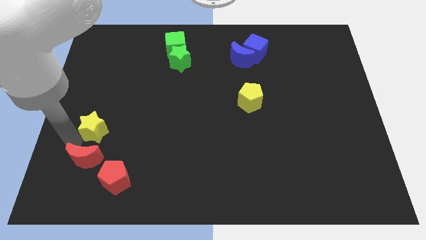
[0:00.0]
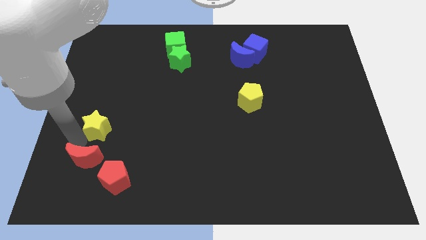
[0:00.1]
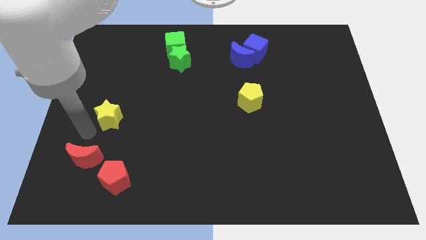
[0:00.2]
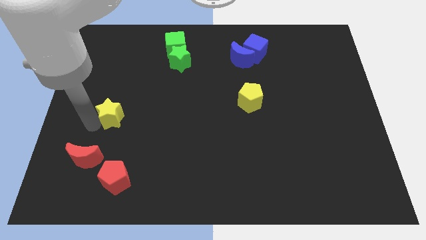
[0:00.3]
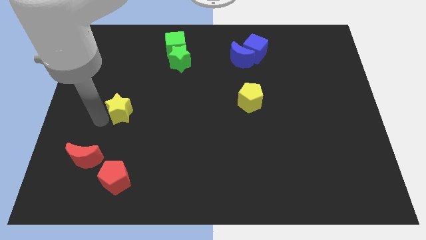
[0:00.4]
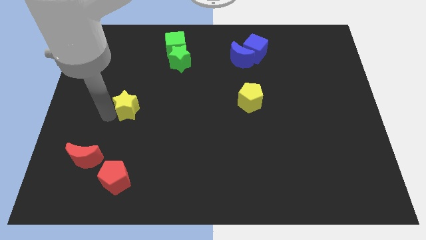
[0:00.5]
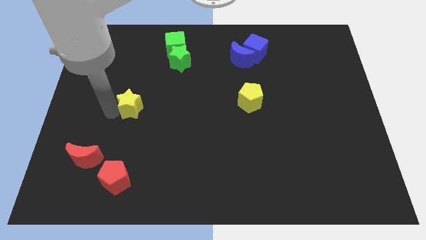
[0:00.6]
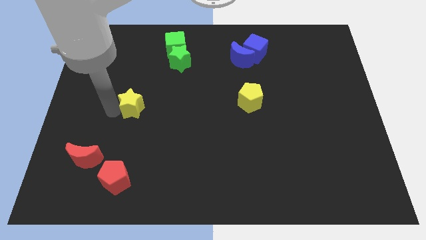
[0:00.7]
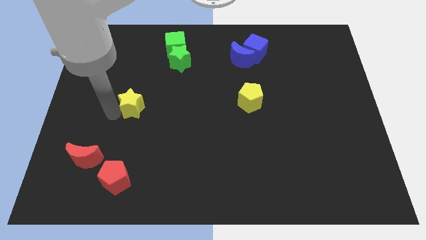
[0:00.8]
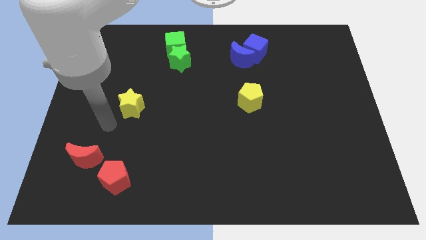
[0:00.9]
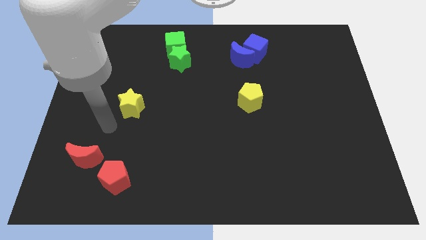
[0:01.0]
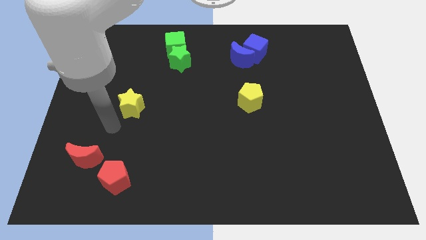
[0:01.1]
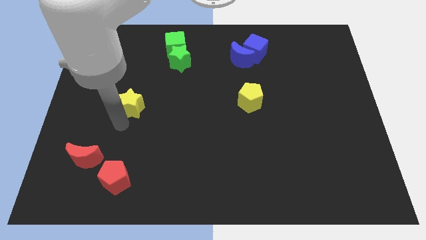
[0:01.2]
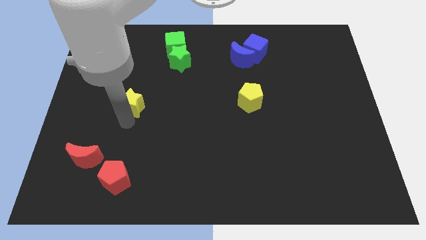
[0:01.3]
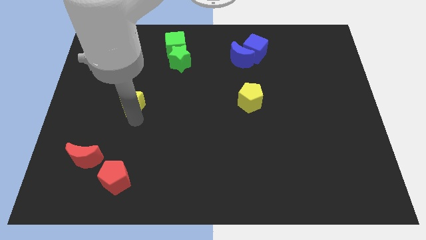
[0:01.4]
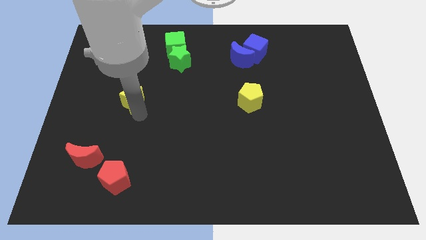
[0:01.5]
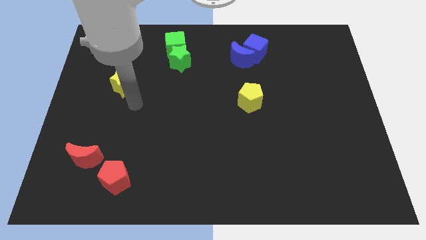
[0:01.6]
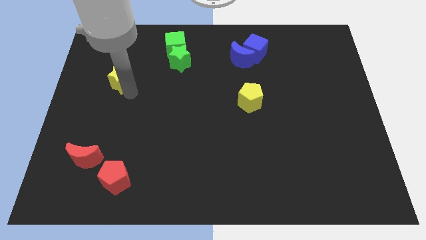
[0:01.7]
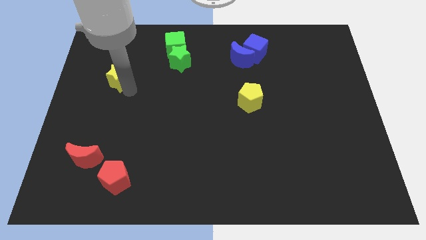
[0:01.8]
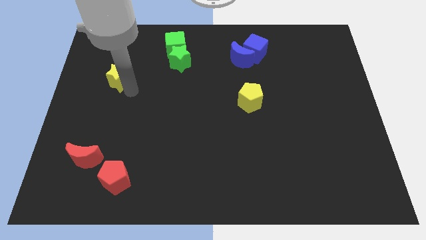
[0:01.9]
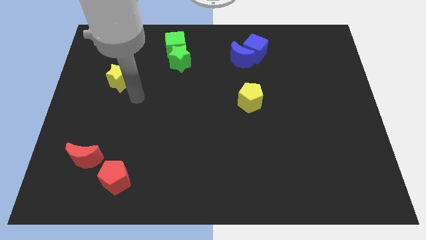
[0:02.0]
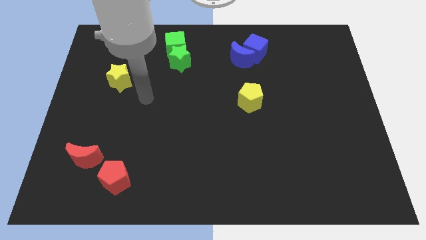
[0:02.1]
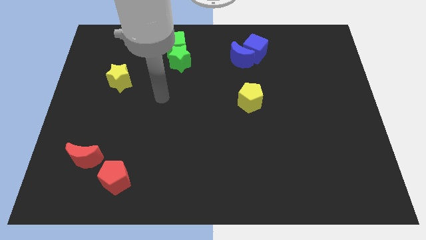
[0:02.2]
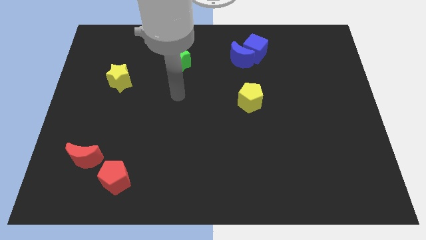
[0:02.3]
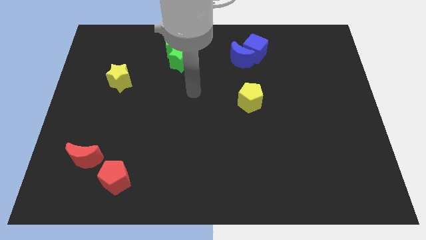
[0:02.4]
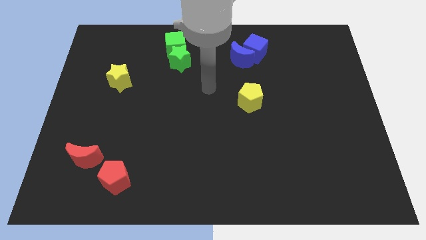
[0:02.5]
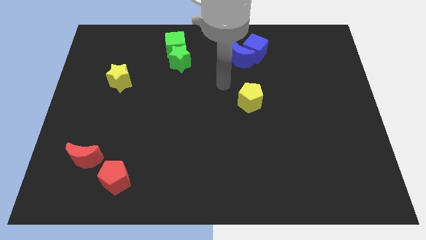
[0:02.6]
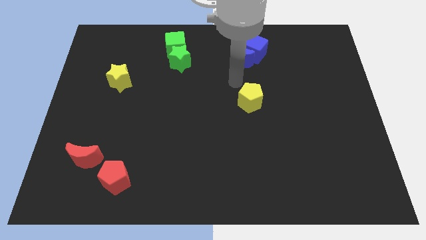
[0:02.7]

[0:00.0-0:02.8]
separate yellow star from red moon

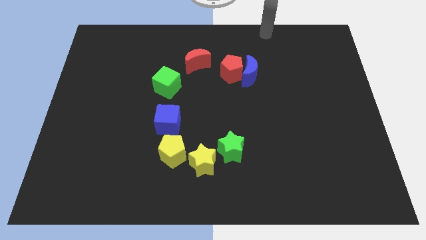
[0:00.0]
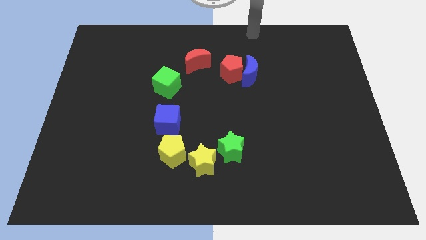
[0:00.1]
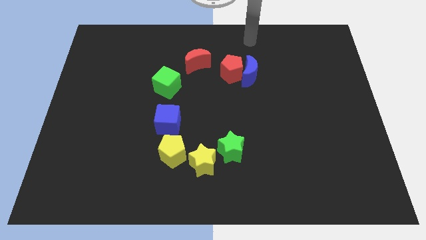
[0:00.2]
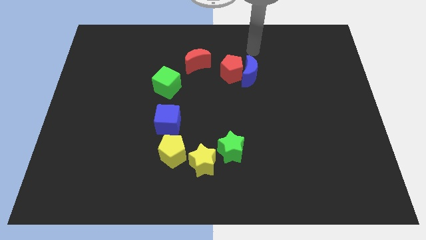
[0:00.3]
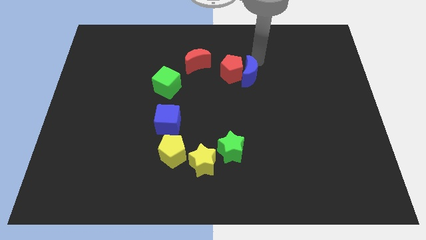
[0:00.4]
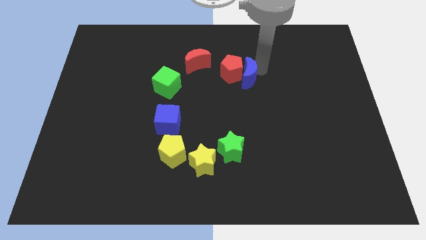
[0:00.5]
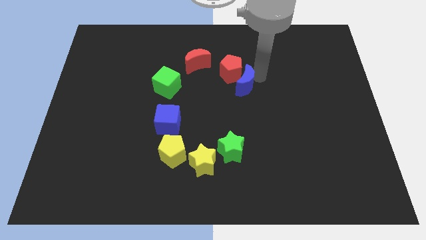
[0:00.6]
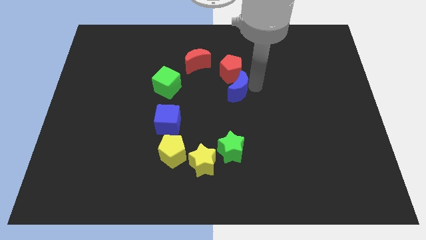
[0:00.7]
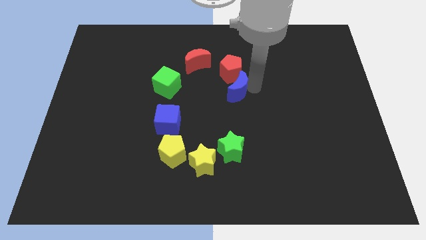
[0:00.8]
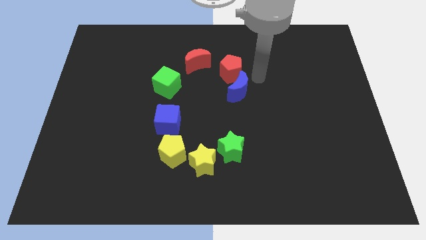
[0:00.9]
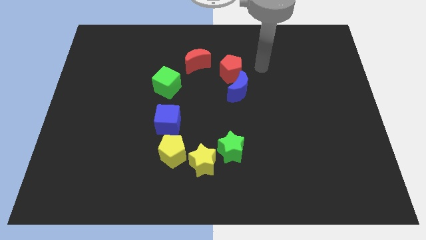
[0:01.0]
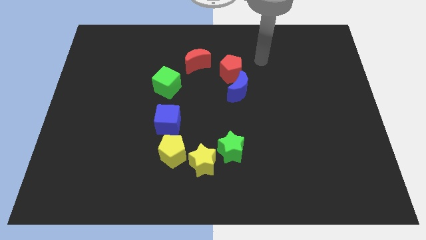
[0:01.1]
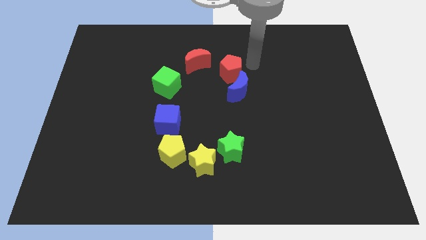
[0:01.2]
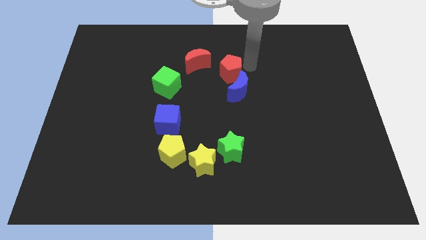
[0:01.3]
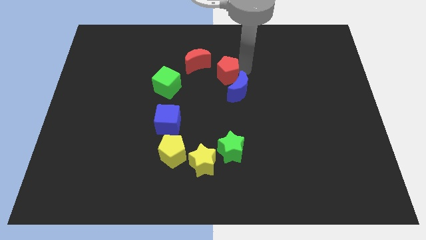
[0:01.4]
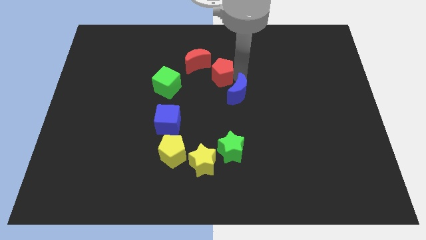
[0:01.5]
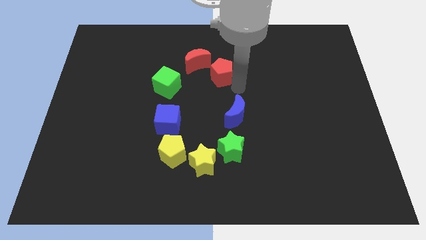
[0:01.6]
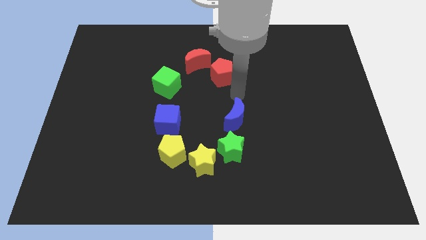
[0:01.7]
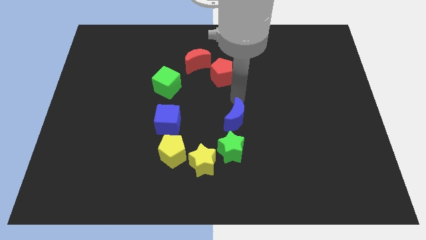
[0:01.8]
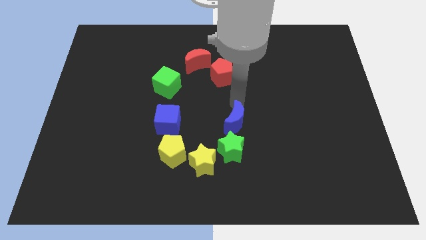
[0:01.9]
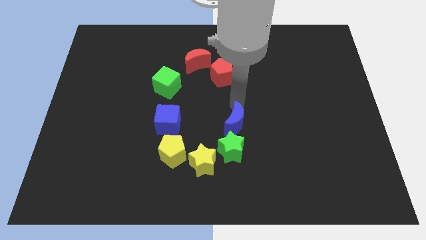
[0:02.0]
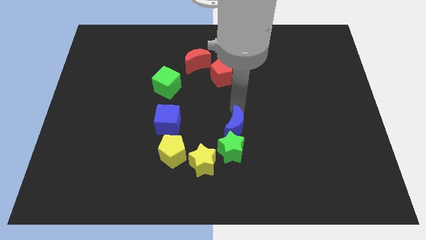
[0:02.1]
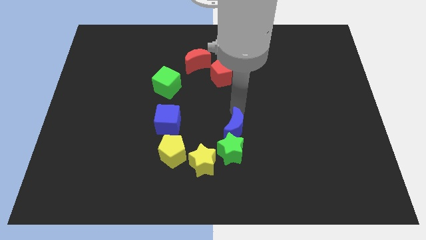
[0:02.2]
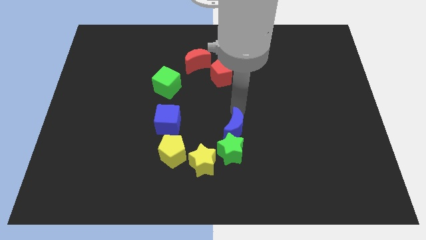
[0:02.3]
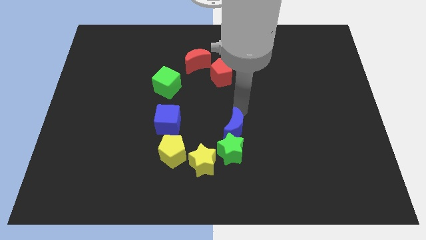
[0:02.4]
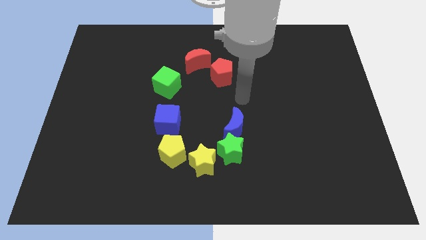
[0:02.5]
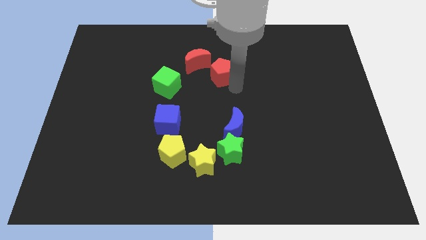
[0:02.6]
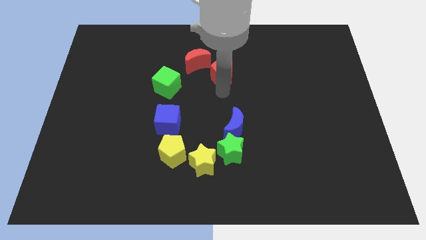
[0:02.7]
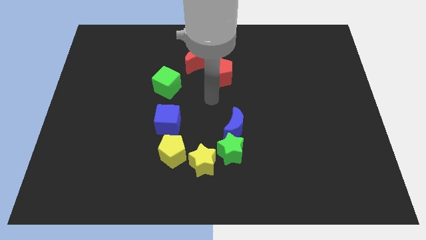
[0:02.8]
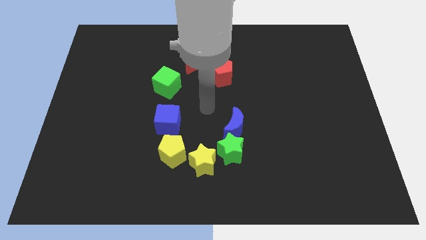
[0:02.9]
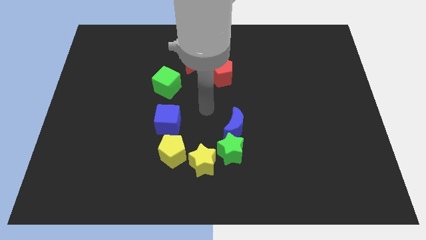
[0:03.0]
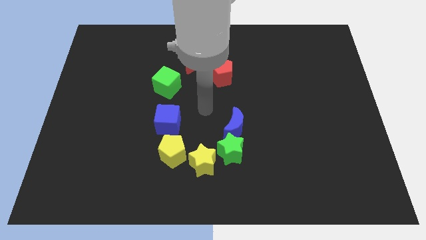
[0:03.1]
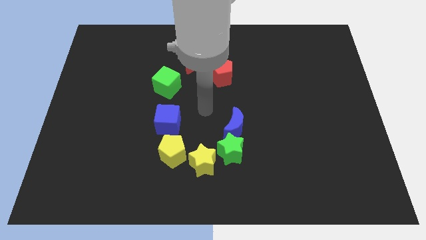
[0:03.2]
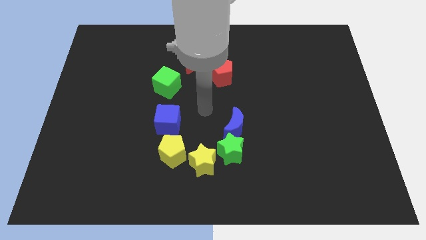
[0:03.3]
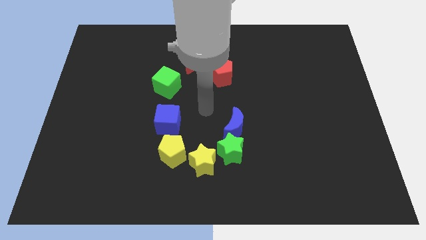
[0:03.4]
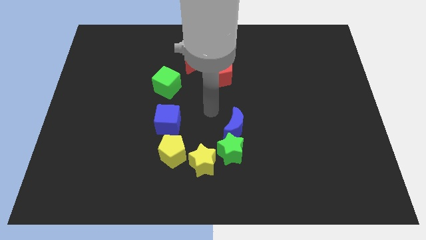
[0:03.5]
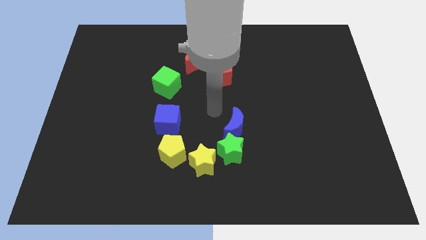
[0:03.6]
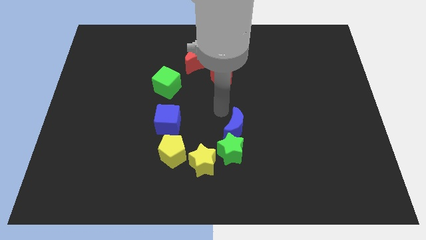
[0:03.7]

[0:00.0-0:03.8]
push the blue crescent into the green star

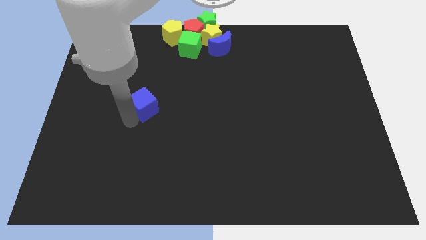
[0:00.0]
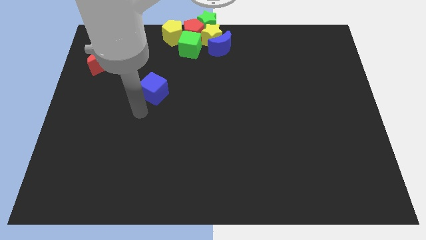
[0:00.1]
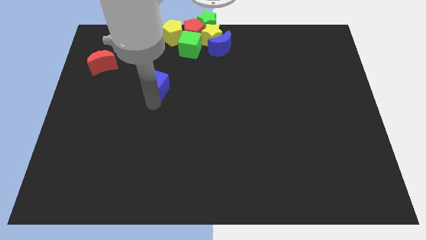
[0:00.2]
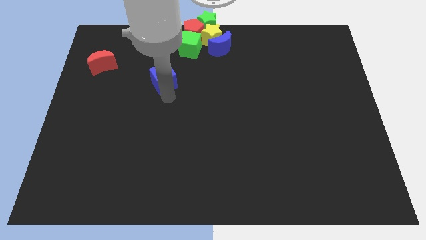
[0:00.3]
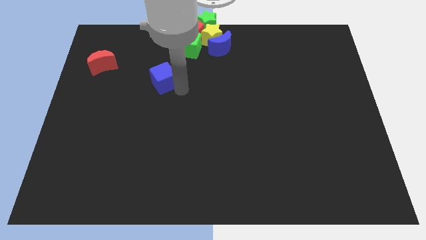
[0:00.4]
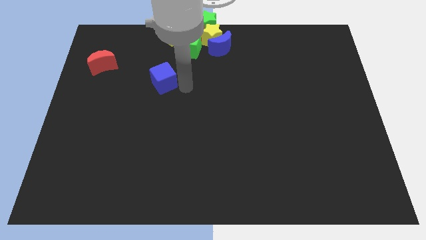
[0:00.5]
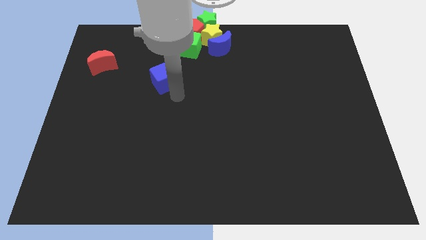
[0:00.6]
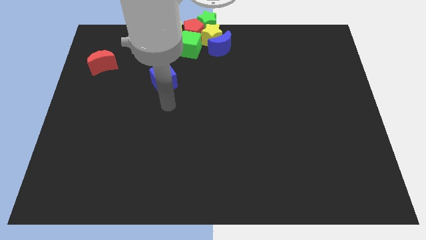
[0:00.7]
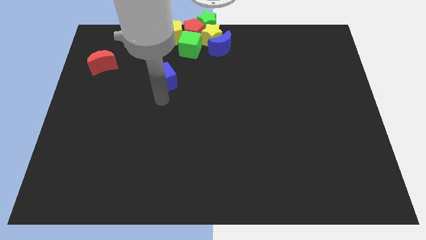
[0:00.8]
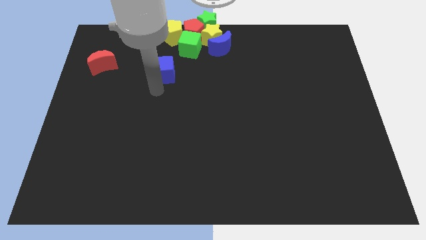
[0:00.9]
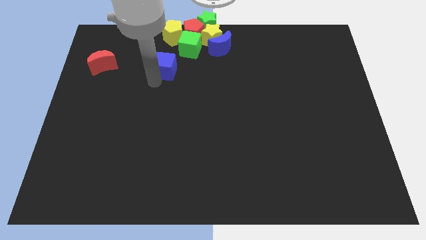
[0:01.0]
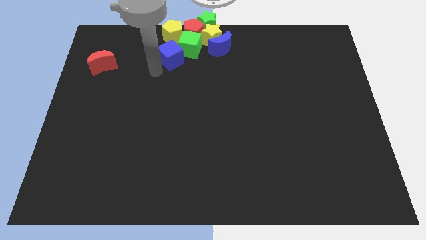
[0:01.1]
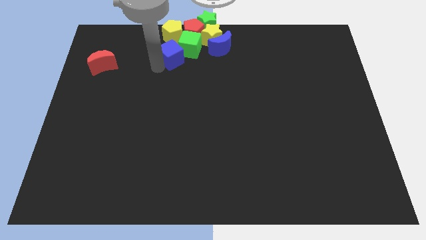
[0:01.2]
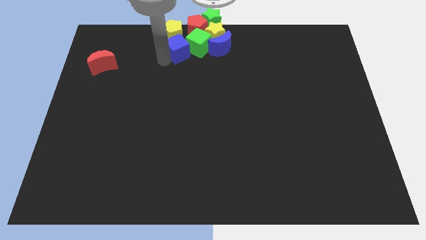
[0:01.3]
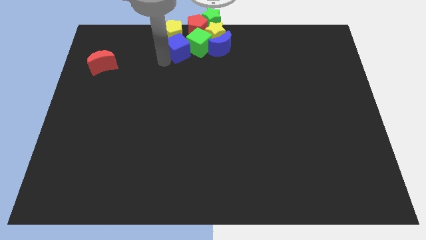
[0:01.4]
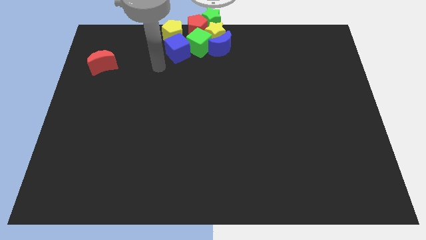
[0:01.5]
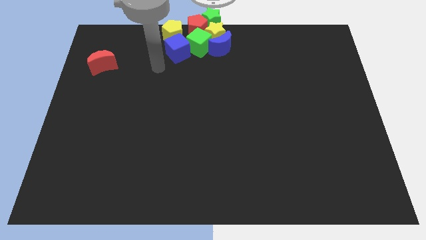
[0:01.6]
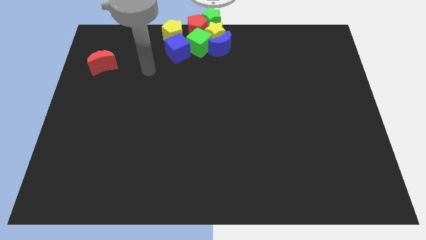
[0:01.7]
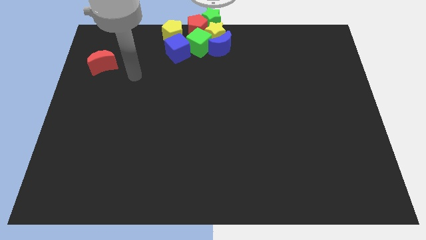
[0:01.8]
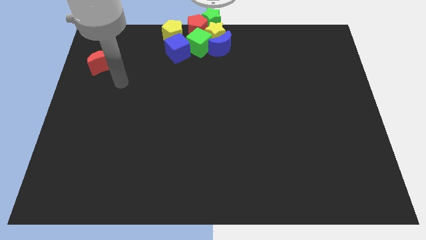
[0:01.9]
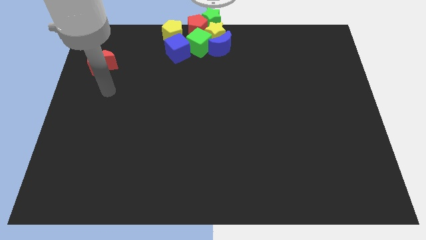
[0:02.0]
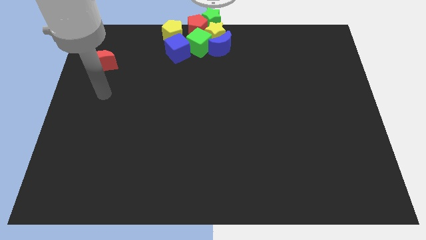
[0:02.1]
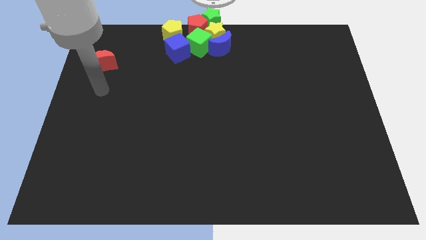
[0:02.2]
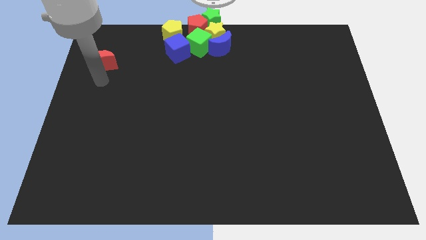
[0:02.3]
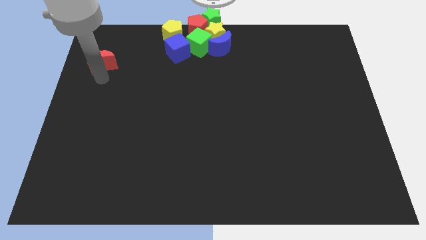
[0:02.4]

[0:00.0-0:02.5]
push blue cube into the group of blocks
